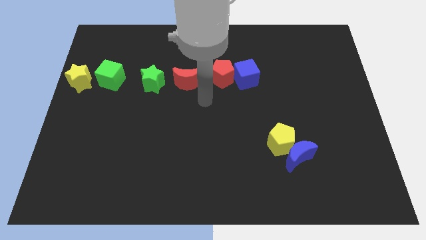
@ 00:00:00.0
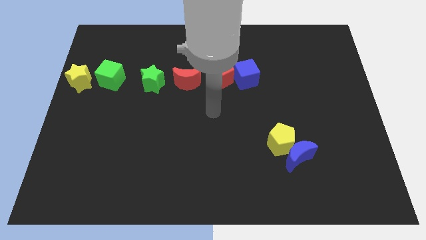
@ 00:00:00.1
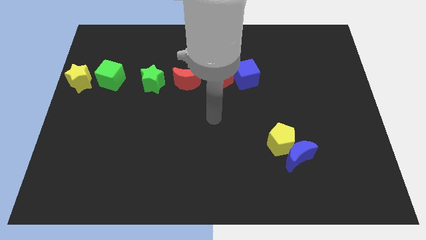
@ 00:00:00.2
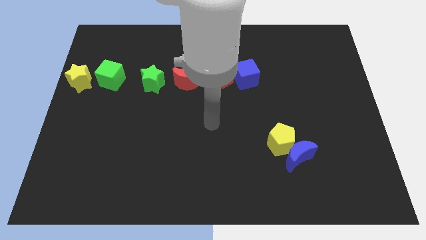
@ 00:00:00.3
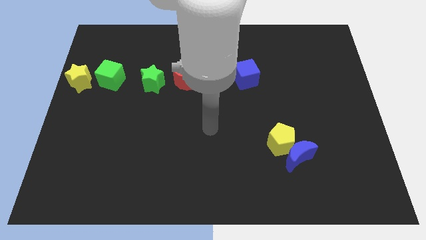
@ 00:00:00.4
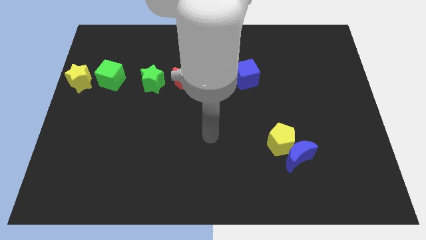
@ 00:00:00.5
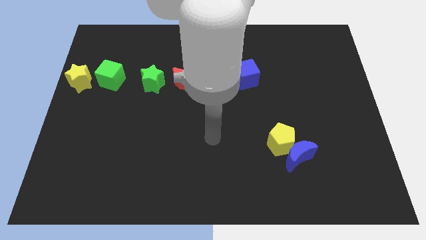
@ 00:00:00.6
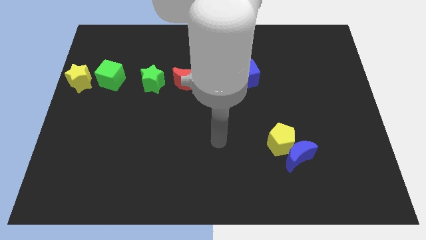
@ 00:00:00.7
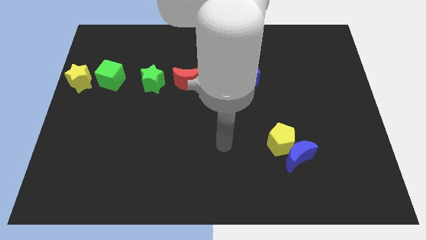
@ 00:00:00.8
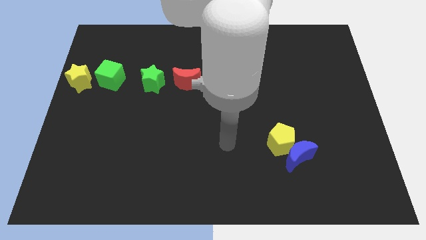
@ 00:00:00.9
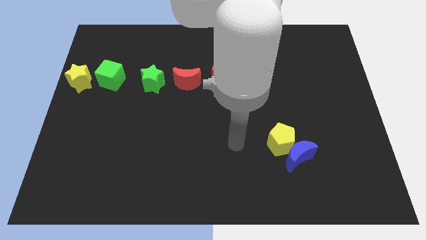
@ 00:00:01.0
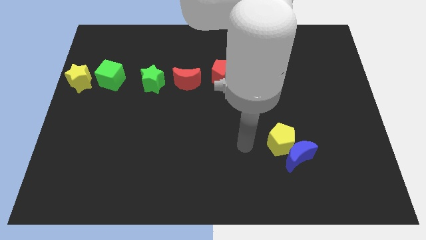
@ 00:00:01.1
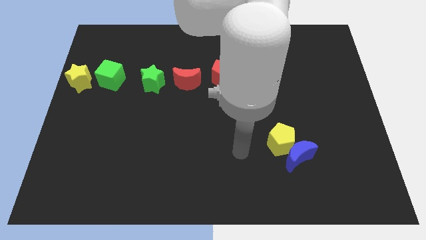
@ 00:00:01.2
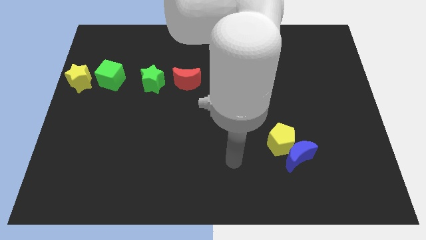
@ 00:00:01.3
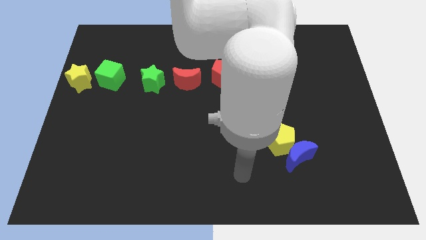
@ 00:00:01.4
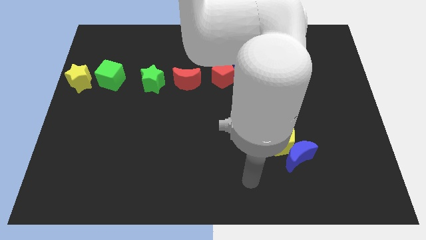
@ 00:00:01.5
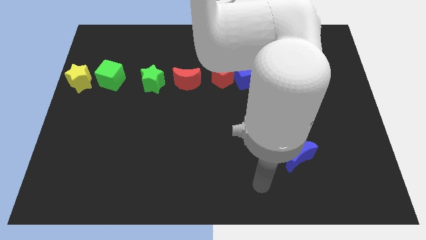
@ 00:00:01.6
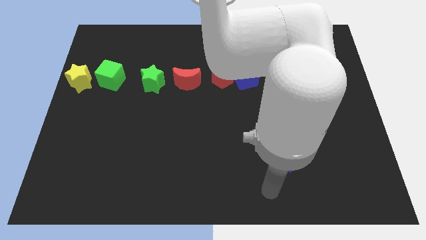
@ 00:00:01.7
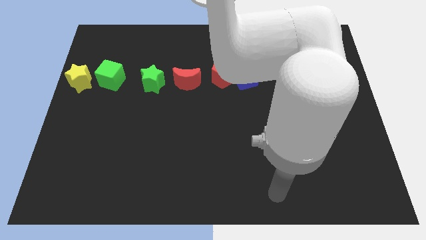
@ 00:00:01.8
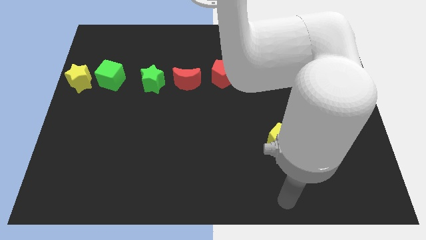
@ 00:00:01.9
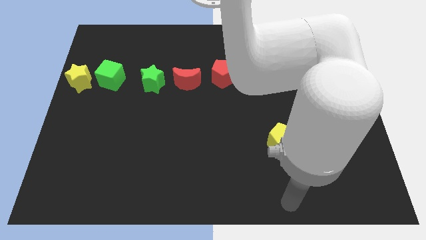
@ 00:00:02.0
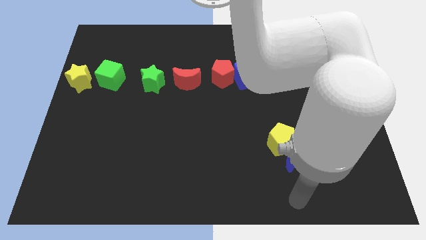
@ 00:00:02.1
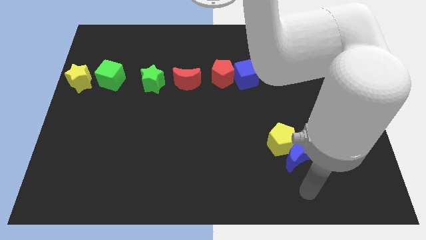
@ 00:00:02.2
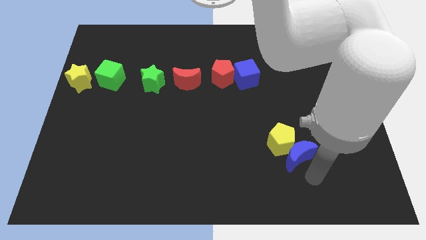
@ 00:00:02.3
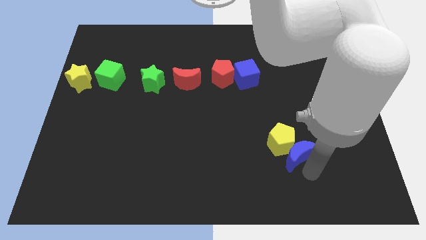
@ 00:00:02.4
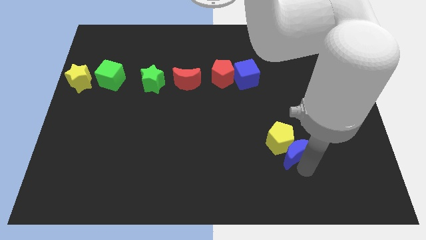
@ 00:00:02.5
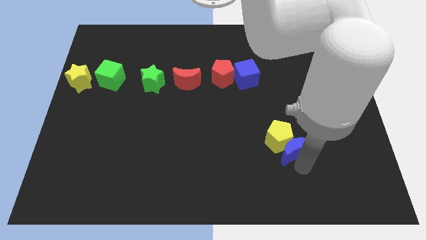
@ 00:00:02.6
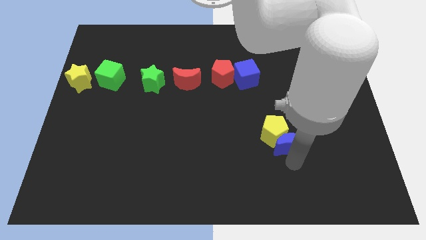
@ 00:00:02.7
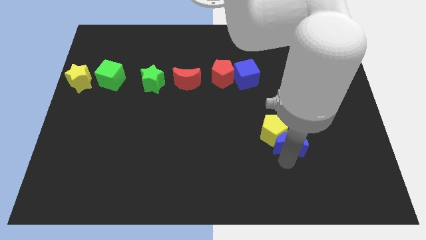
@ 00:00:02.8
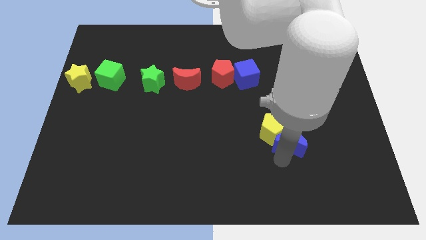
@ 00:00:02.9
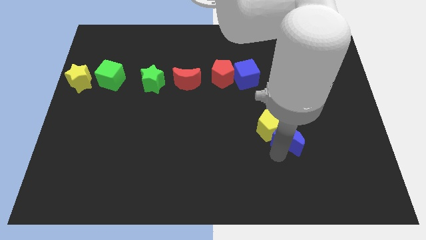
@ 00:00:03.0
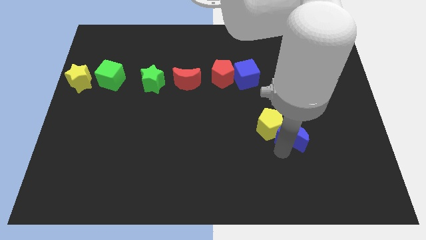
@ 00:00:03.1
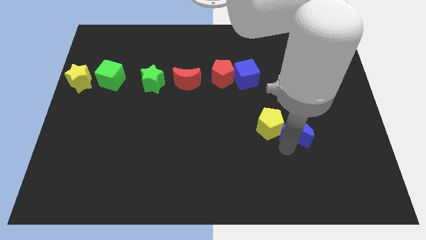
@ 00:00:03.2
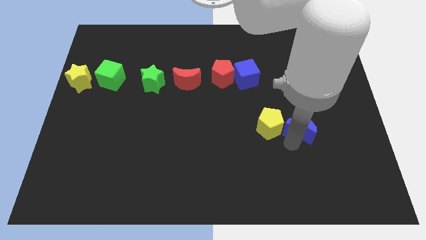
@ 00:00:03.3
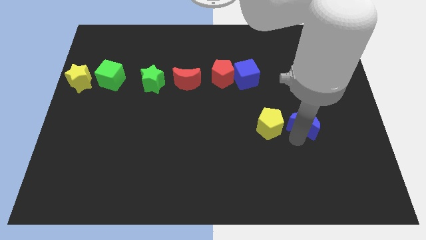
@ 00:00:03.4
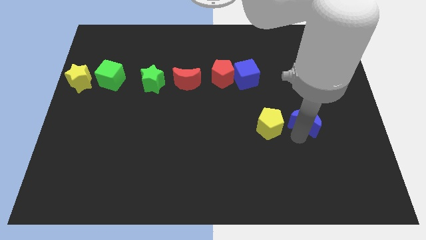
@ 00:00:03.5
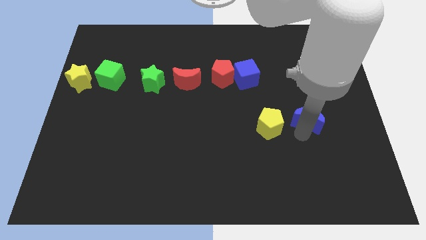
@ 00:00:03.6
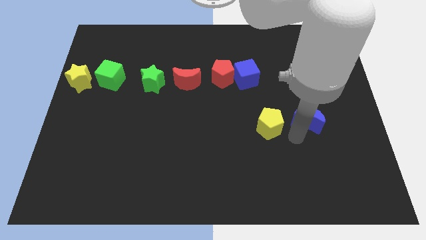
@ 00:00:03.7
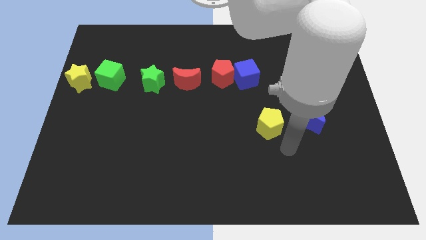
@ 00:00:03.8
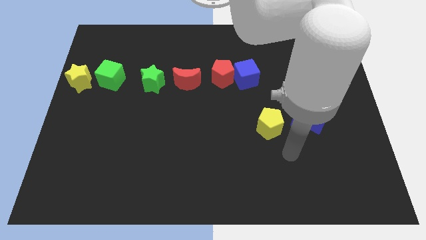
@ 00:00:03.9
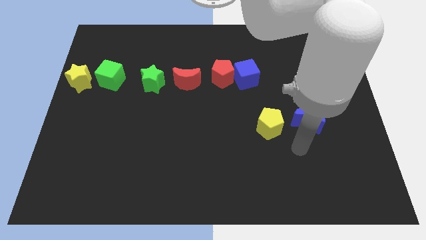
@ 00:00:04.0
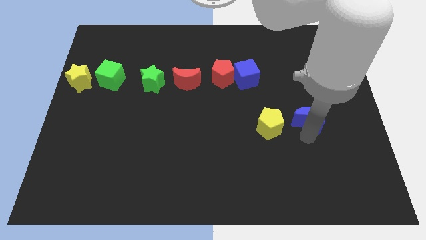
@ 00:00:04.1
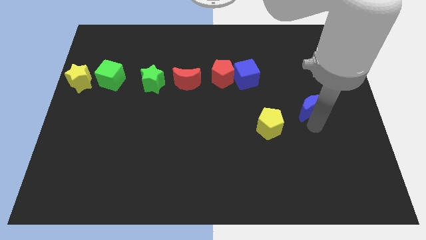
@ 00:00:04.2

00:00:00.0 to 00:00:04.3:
separate the blue crescent from the yellow pentagon

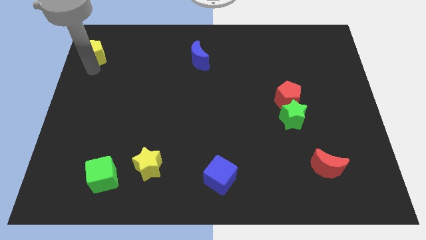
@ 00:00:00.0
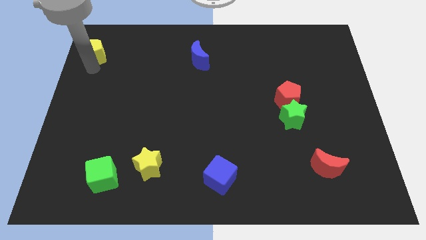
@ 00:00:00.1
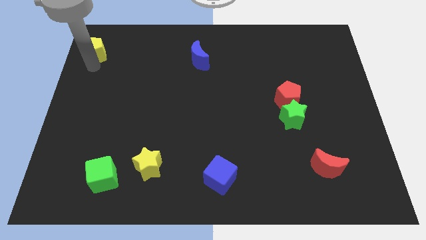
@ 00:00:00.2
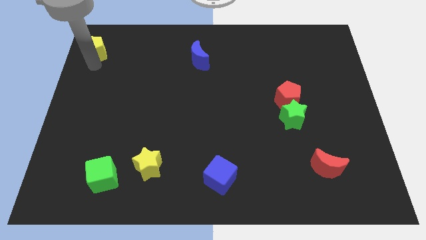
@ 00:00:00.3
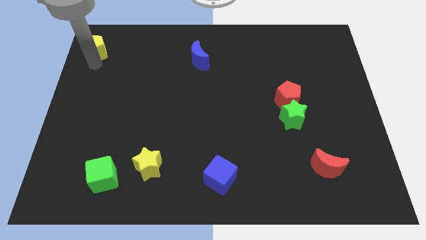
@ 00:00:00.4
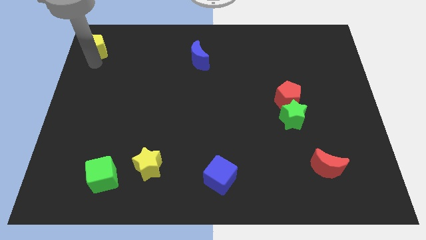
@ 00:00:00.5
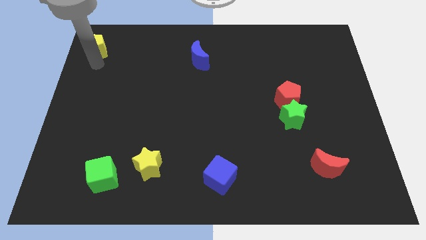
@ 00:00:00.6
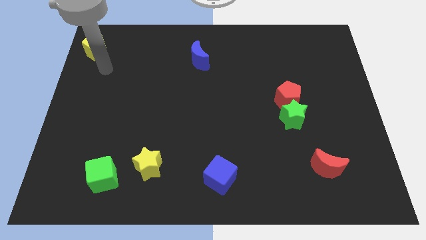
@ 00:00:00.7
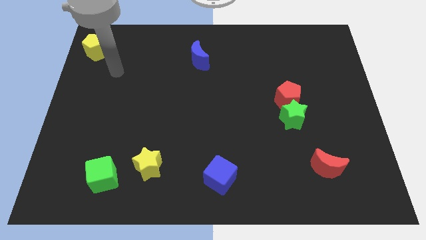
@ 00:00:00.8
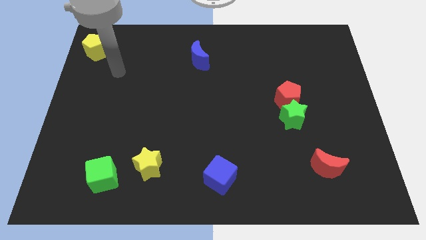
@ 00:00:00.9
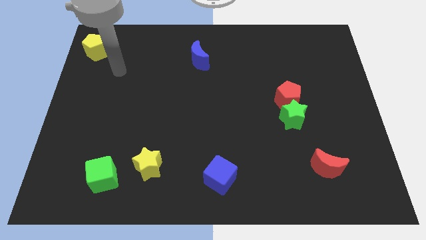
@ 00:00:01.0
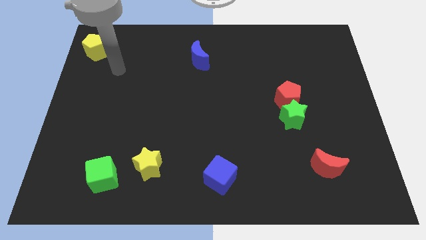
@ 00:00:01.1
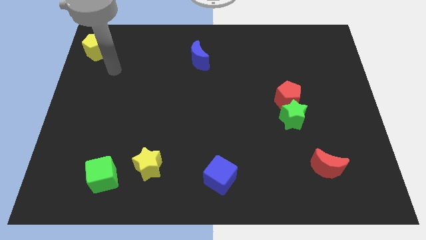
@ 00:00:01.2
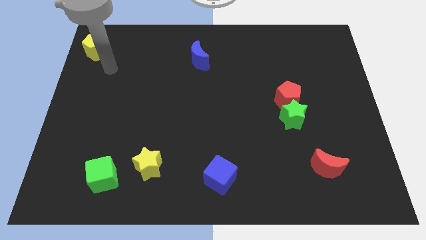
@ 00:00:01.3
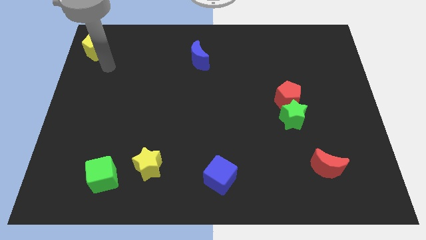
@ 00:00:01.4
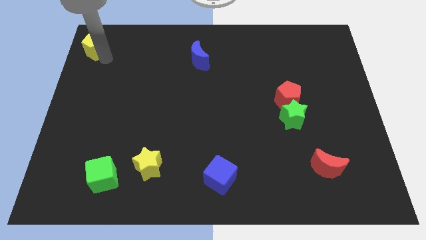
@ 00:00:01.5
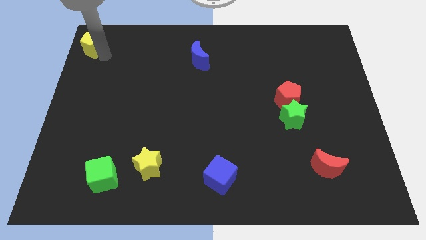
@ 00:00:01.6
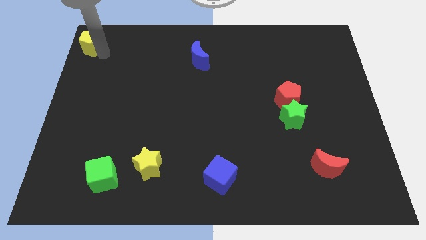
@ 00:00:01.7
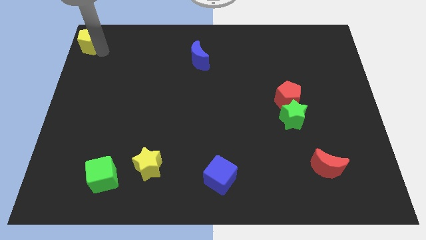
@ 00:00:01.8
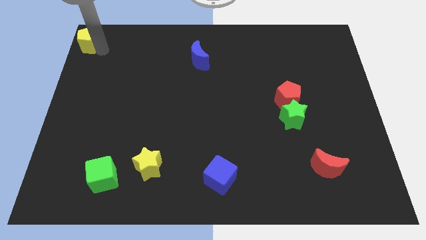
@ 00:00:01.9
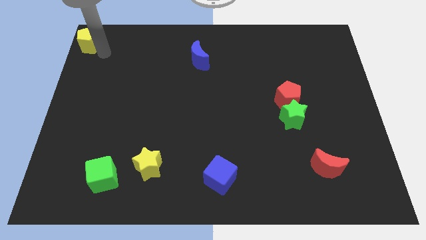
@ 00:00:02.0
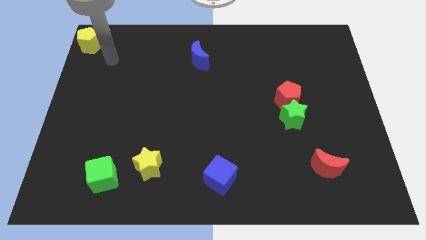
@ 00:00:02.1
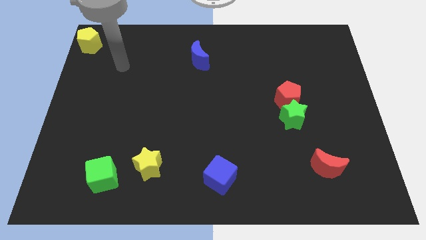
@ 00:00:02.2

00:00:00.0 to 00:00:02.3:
push yellow pentagon to the top left corner of the board

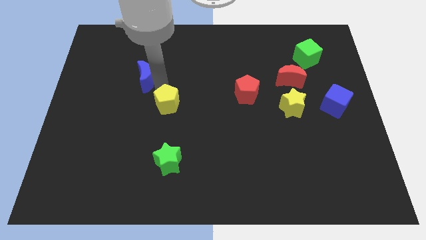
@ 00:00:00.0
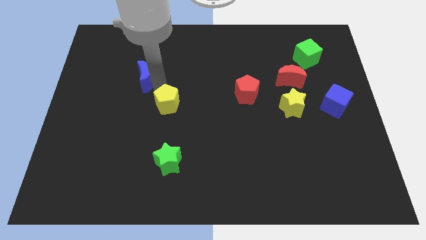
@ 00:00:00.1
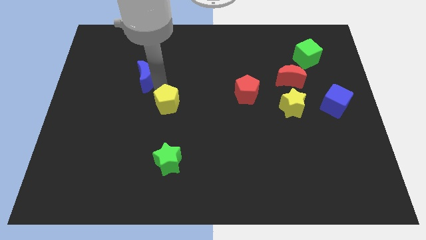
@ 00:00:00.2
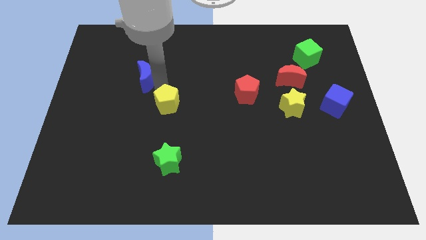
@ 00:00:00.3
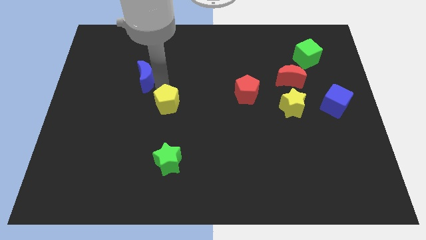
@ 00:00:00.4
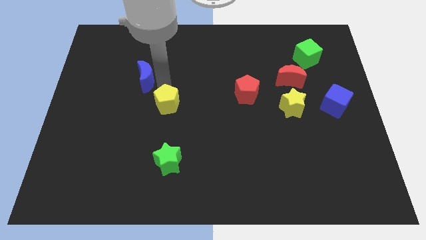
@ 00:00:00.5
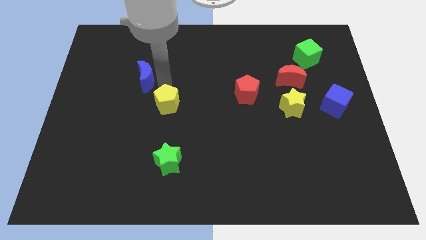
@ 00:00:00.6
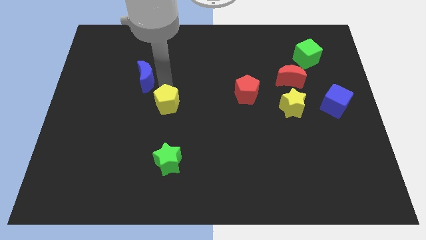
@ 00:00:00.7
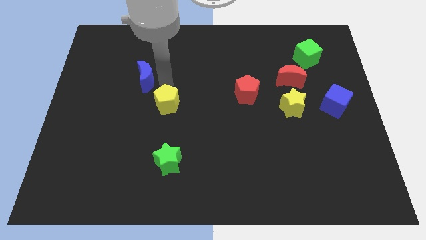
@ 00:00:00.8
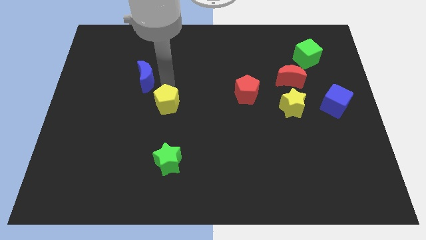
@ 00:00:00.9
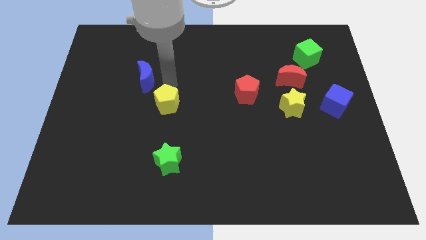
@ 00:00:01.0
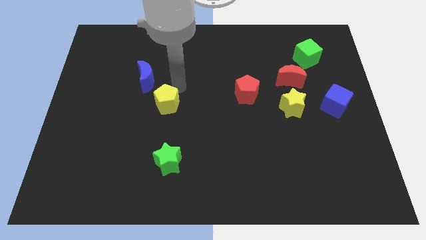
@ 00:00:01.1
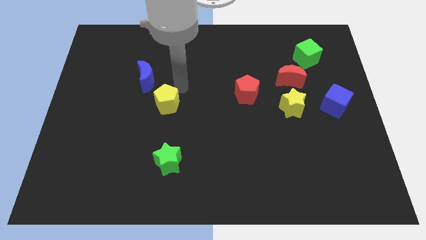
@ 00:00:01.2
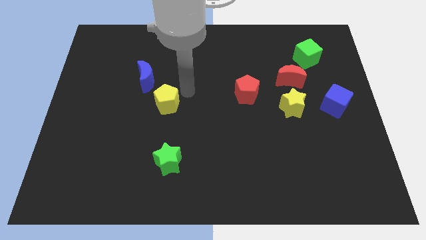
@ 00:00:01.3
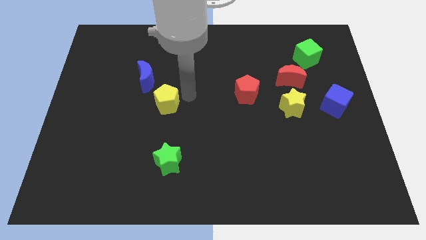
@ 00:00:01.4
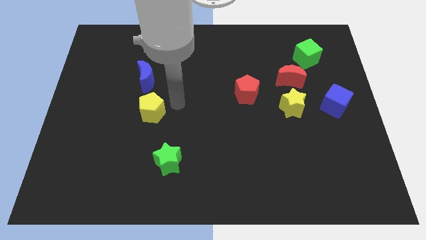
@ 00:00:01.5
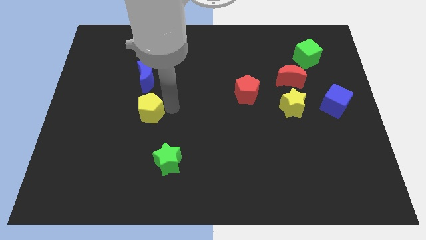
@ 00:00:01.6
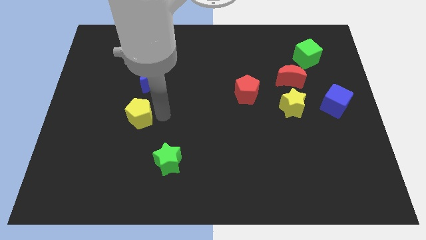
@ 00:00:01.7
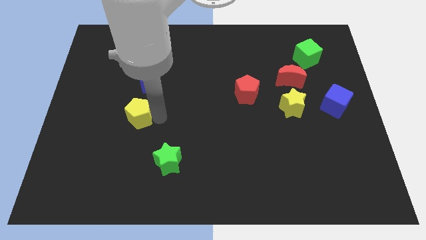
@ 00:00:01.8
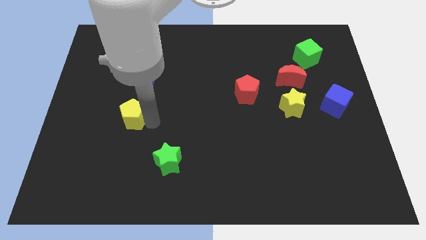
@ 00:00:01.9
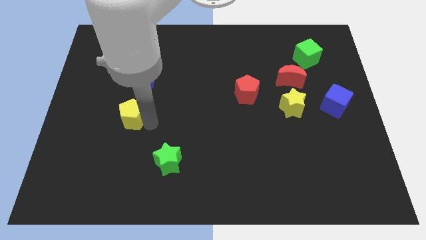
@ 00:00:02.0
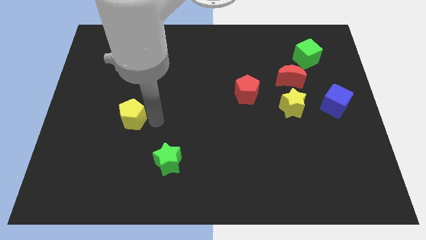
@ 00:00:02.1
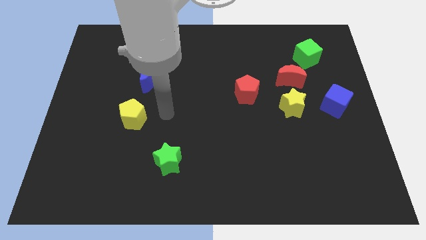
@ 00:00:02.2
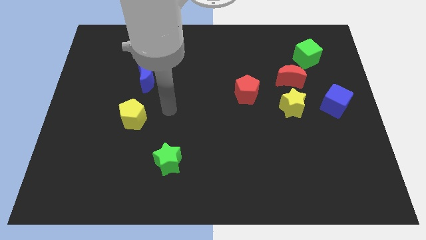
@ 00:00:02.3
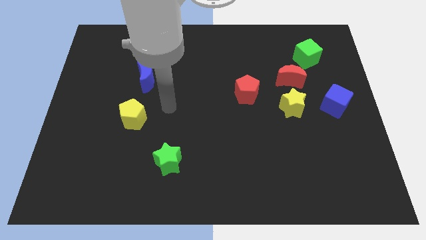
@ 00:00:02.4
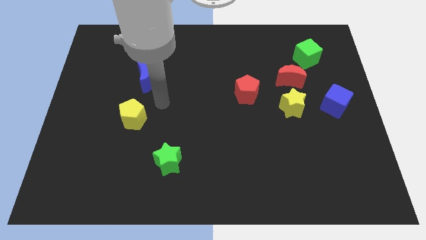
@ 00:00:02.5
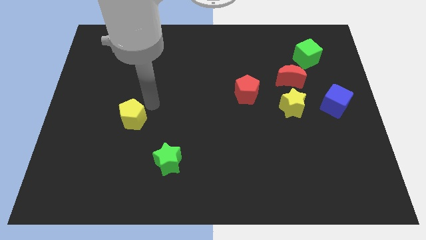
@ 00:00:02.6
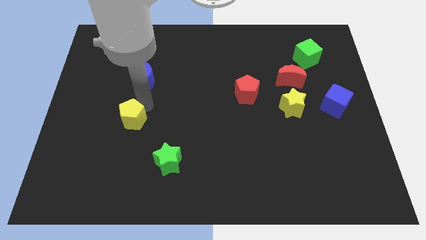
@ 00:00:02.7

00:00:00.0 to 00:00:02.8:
push the yellow pentagon diagonally at the top left of the green star
